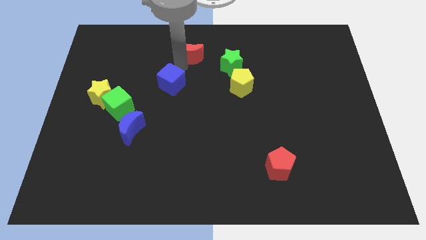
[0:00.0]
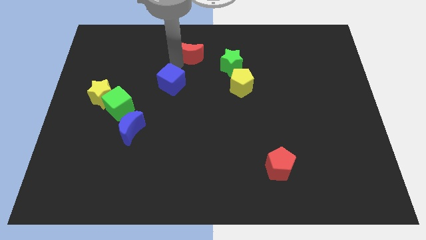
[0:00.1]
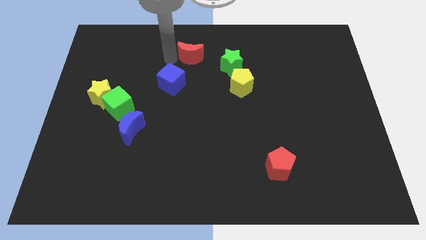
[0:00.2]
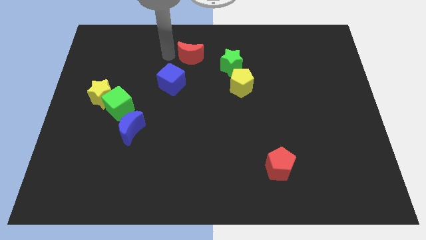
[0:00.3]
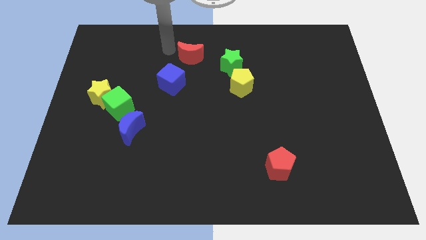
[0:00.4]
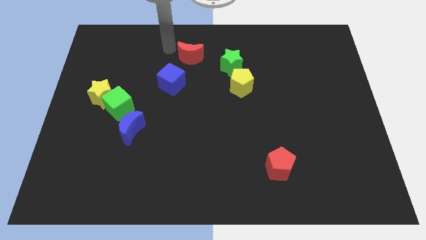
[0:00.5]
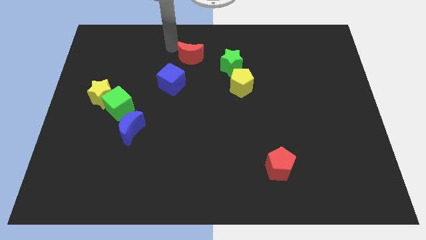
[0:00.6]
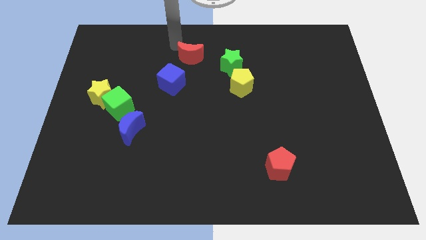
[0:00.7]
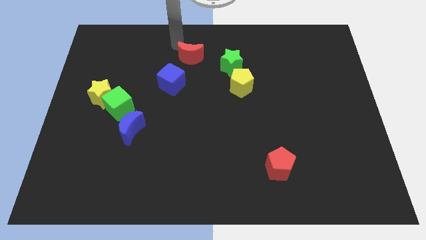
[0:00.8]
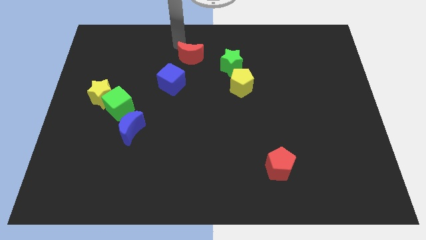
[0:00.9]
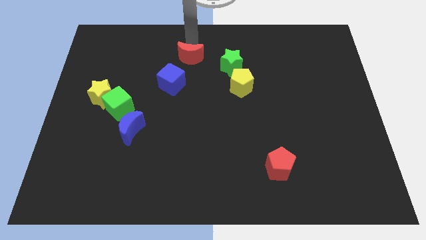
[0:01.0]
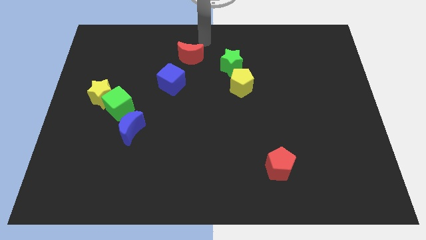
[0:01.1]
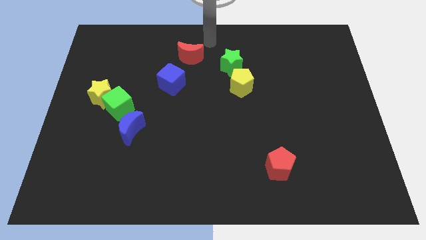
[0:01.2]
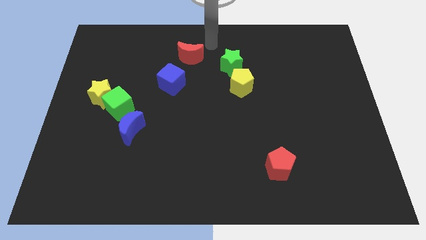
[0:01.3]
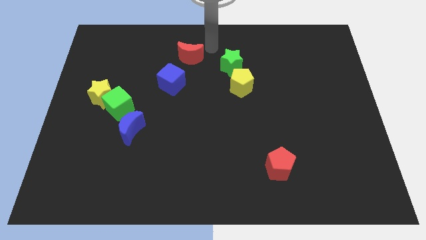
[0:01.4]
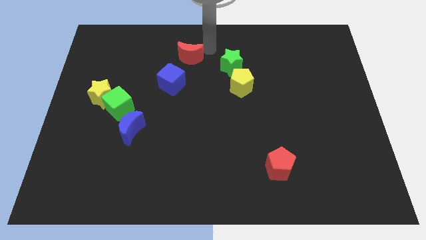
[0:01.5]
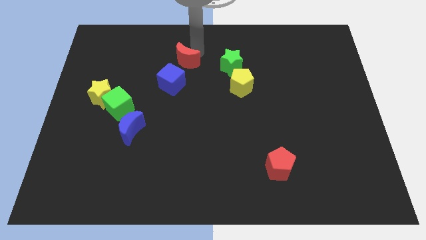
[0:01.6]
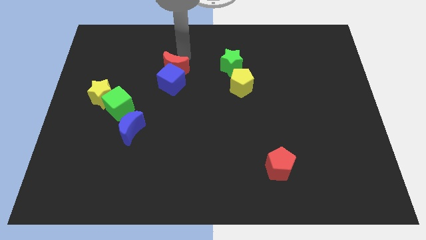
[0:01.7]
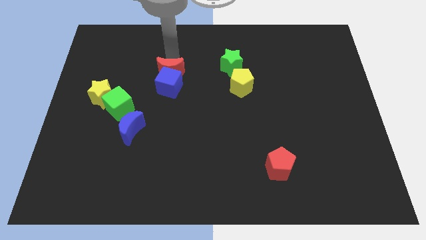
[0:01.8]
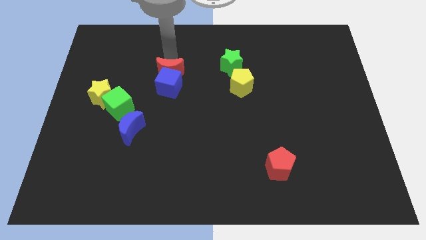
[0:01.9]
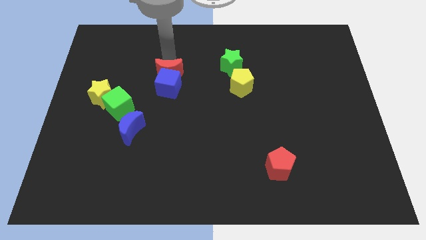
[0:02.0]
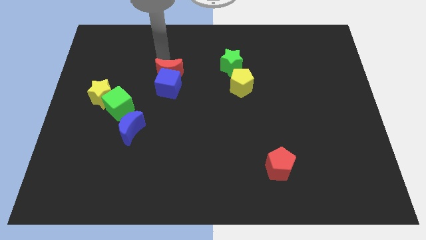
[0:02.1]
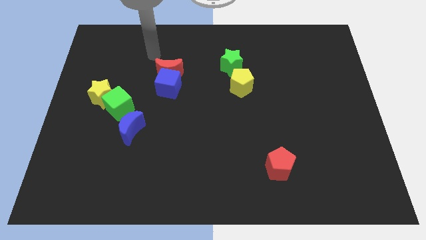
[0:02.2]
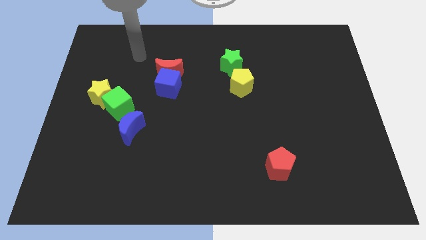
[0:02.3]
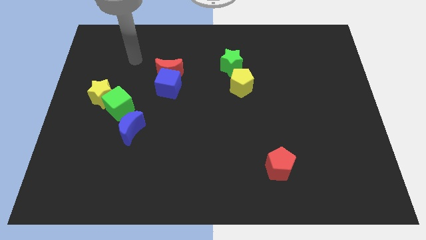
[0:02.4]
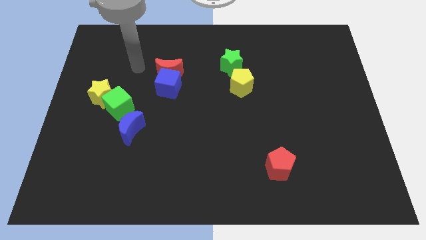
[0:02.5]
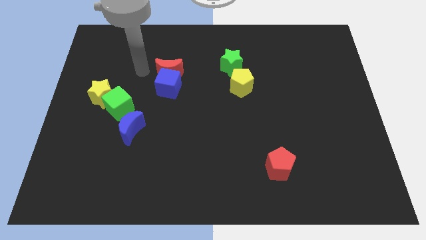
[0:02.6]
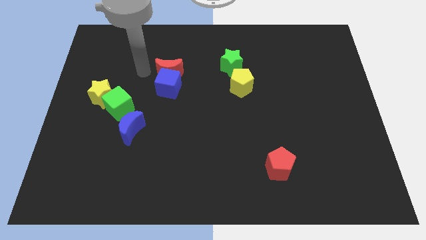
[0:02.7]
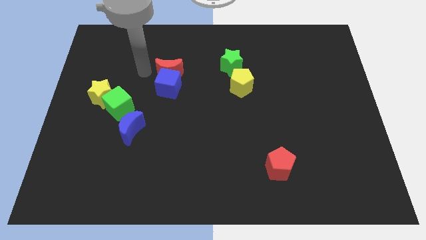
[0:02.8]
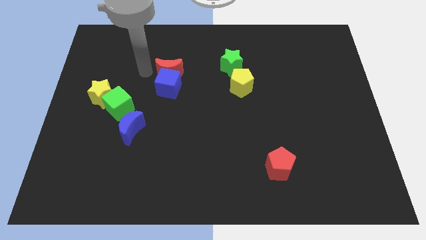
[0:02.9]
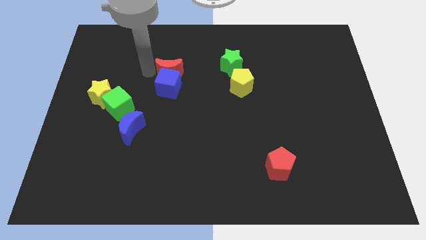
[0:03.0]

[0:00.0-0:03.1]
move your arm to the left side of the red moon and blue cube

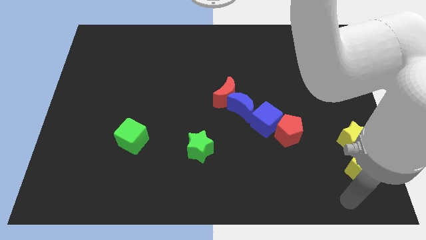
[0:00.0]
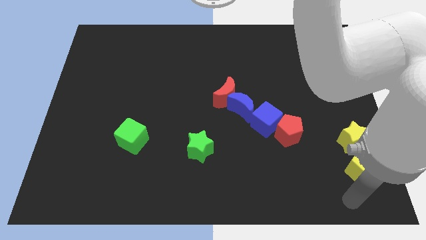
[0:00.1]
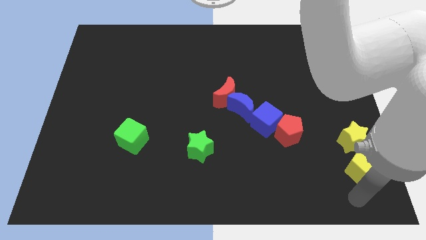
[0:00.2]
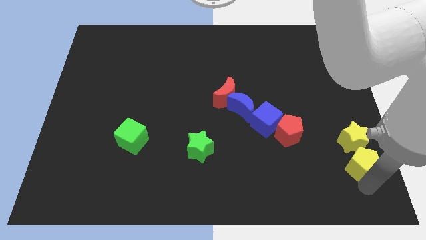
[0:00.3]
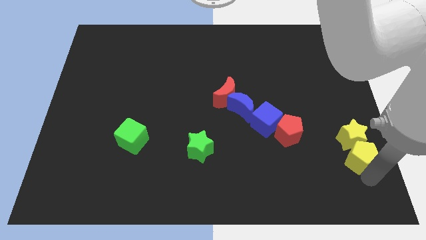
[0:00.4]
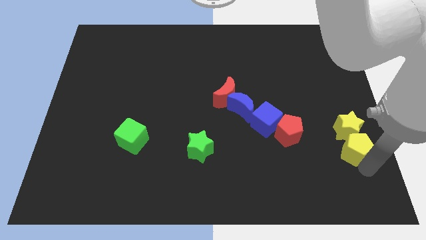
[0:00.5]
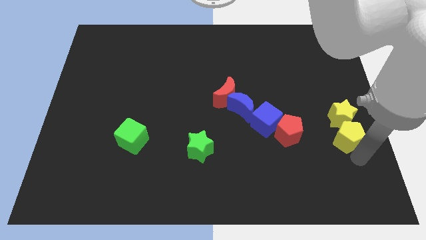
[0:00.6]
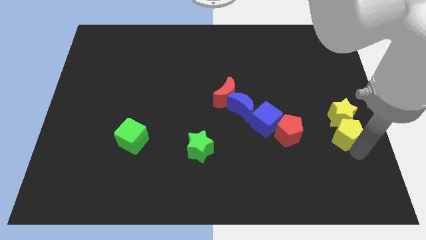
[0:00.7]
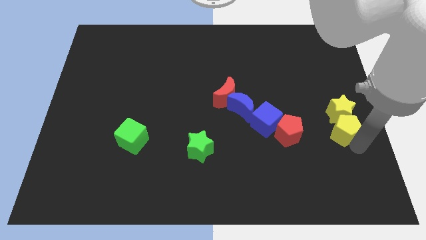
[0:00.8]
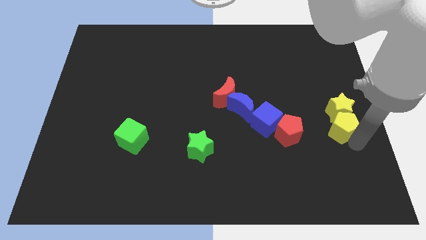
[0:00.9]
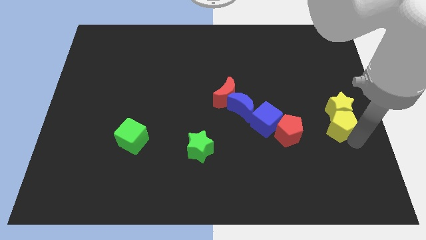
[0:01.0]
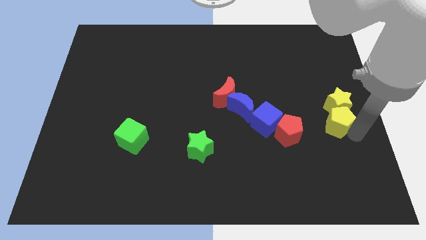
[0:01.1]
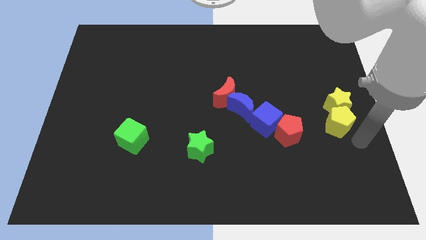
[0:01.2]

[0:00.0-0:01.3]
push the yellow blocks towards the top side of the board

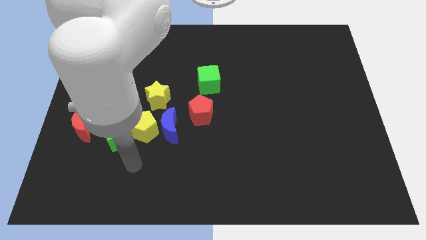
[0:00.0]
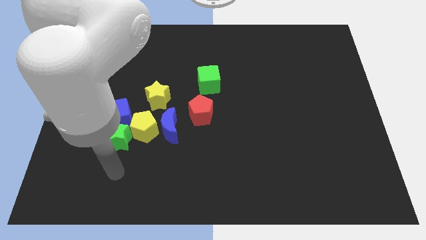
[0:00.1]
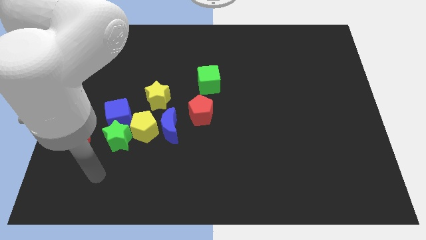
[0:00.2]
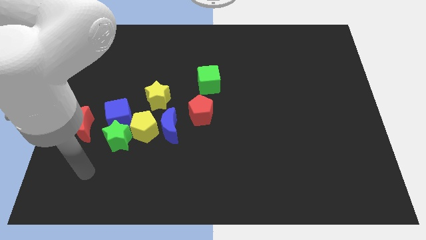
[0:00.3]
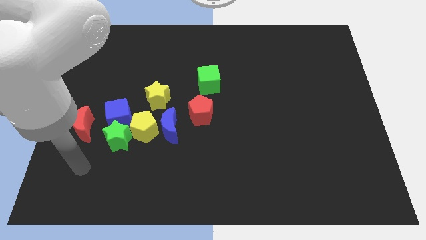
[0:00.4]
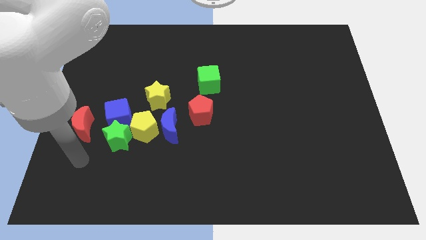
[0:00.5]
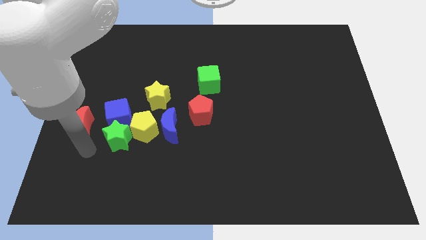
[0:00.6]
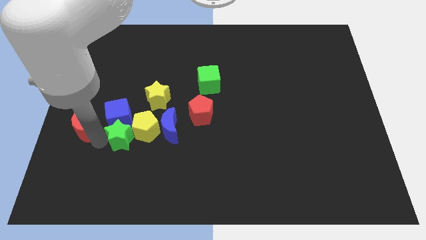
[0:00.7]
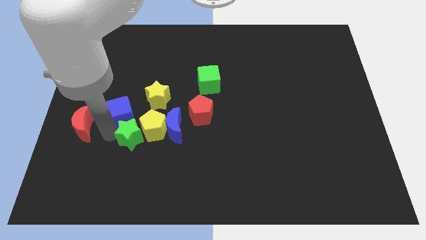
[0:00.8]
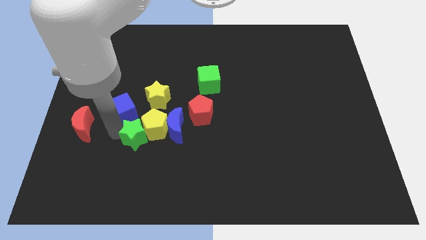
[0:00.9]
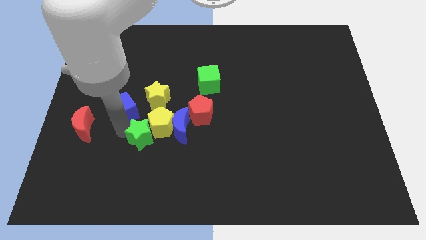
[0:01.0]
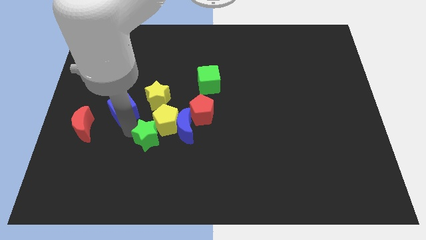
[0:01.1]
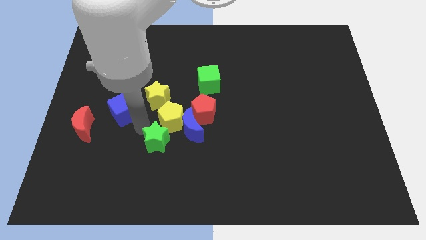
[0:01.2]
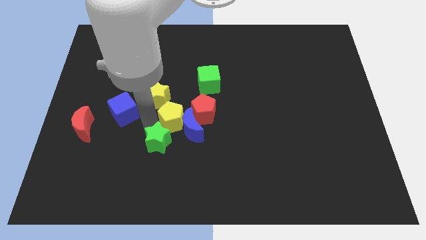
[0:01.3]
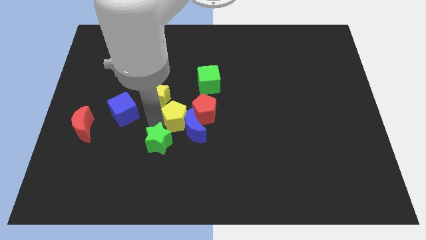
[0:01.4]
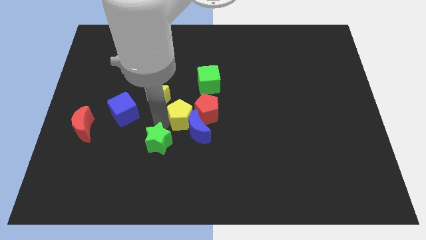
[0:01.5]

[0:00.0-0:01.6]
move the group of blocks to the center

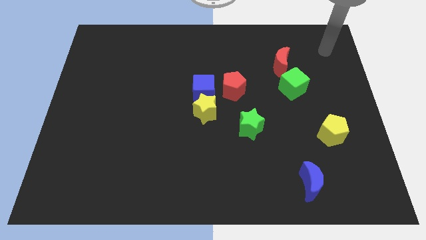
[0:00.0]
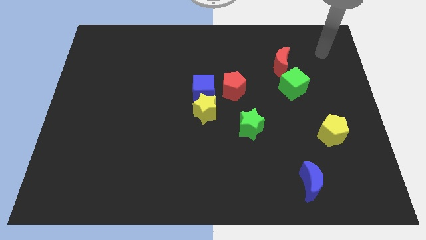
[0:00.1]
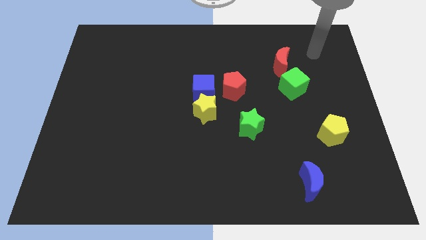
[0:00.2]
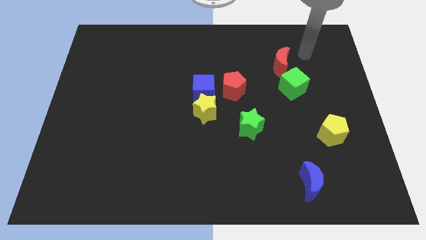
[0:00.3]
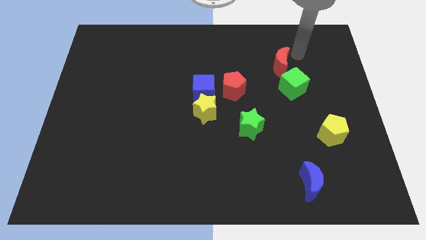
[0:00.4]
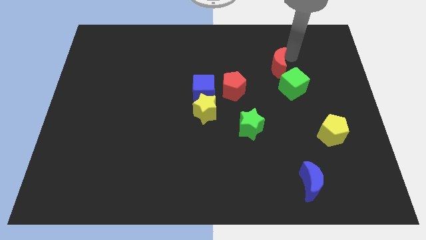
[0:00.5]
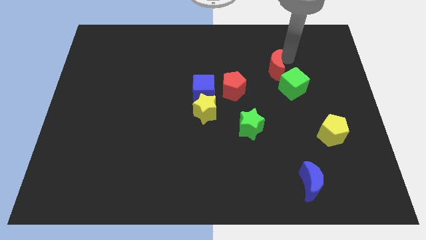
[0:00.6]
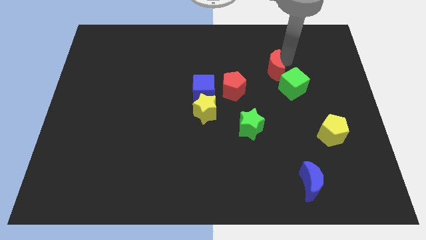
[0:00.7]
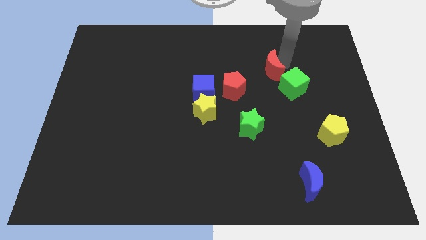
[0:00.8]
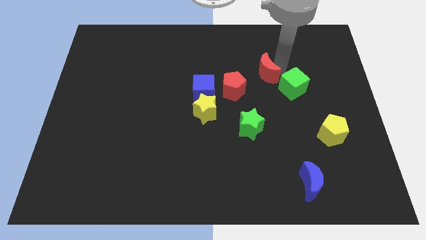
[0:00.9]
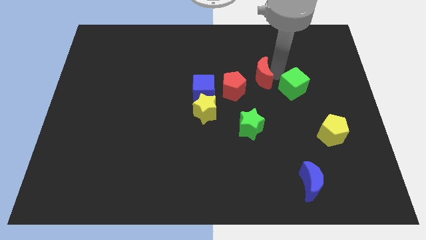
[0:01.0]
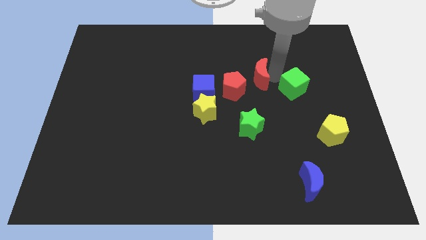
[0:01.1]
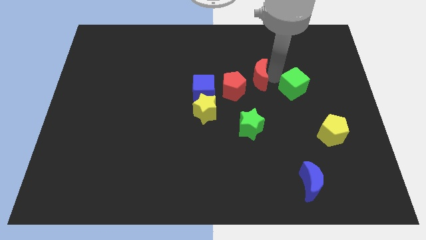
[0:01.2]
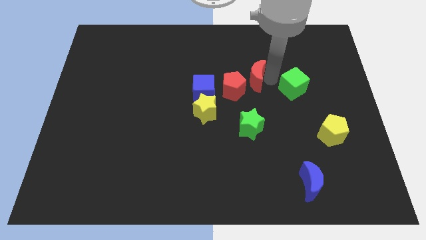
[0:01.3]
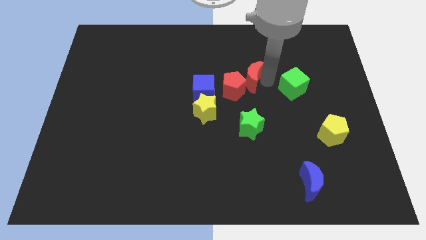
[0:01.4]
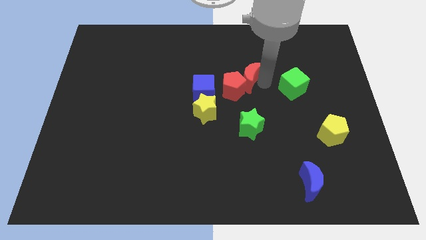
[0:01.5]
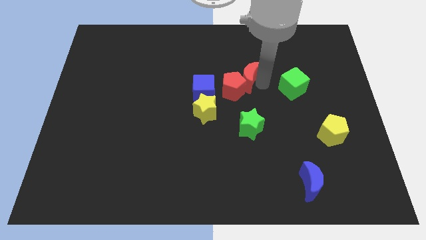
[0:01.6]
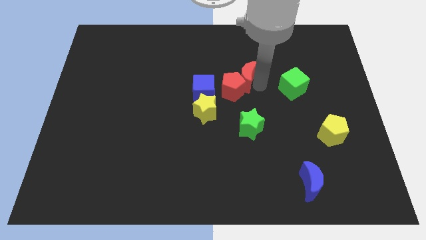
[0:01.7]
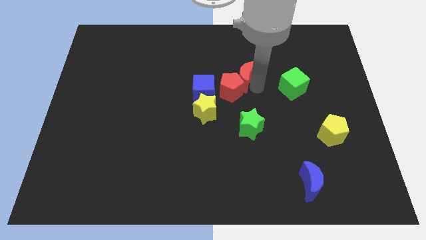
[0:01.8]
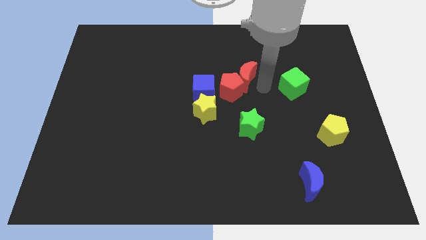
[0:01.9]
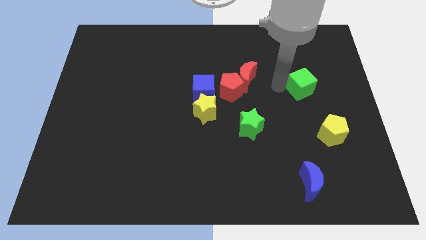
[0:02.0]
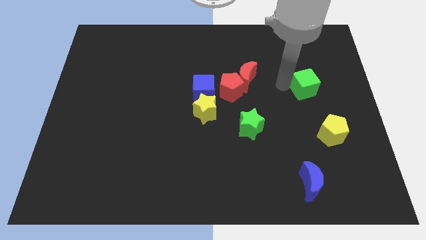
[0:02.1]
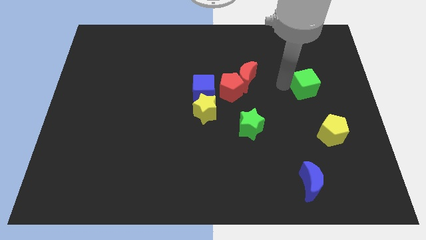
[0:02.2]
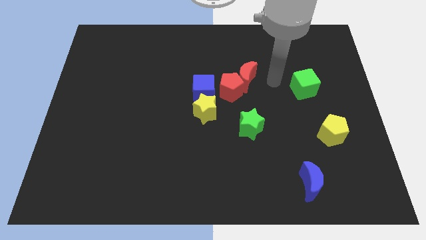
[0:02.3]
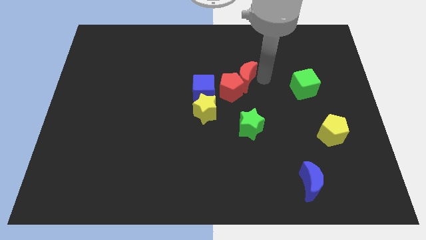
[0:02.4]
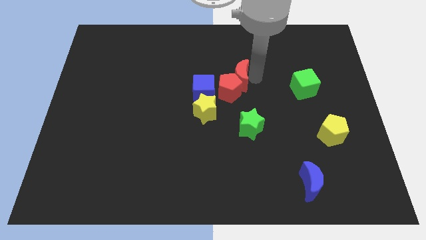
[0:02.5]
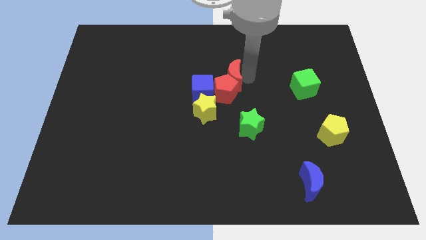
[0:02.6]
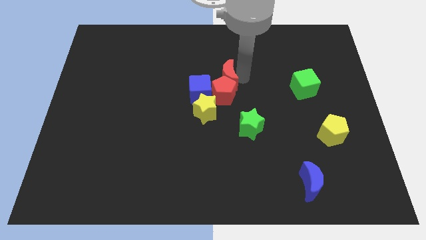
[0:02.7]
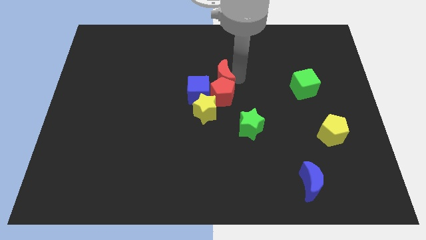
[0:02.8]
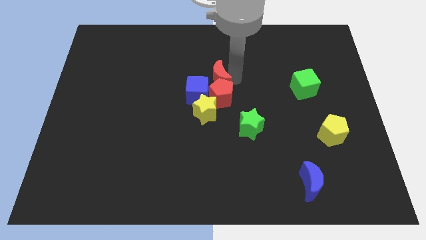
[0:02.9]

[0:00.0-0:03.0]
slightly push the green cube to the right
